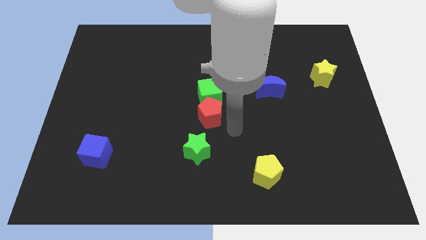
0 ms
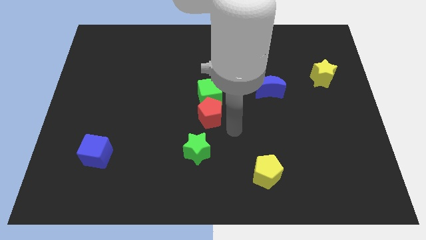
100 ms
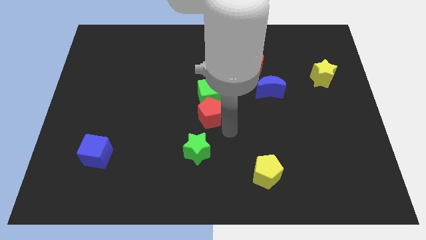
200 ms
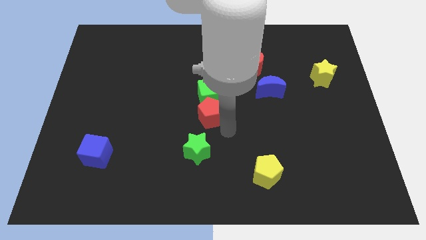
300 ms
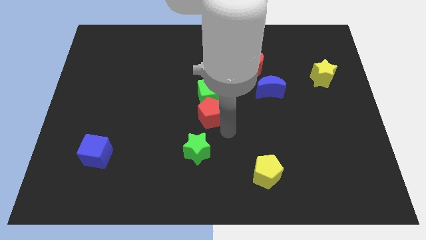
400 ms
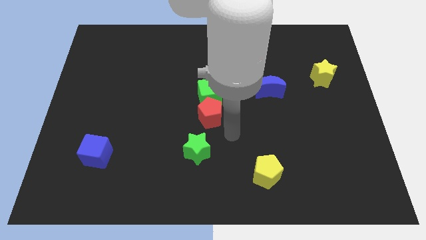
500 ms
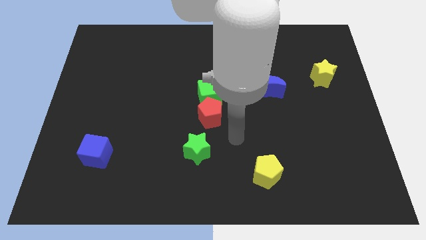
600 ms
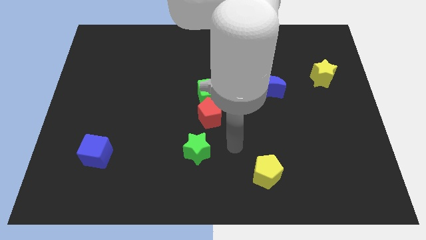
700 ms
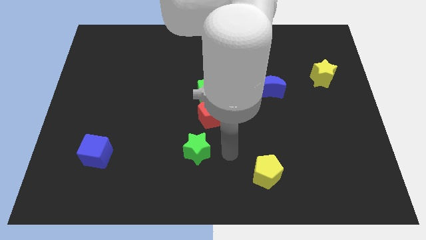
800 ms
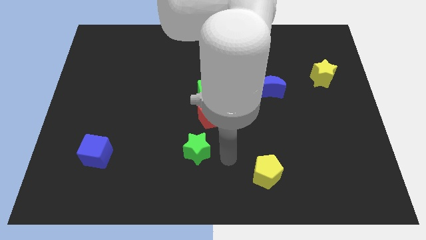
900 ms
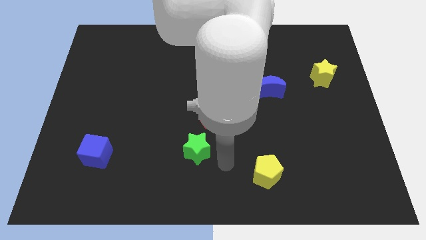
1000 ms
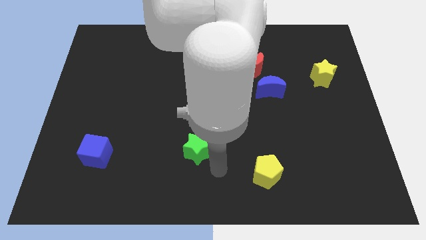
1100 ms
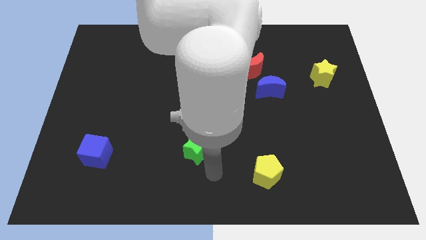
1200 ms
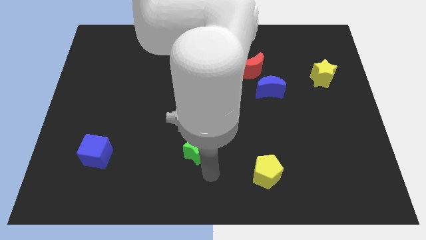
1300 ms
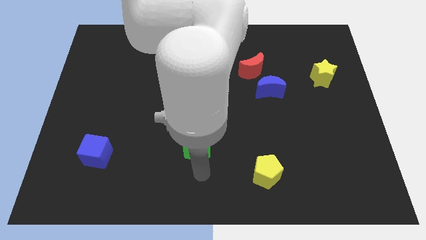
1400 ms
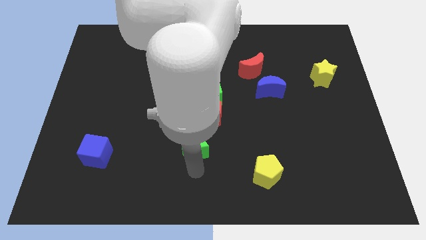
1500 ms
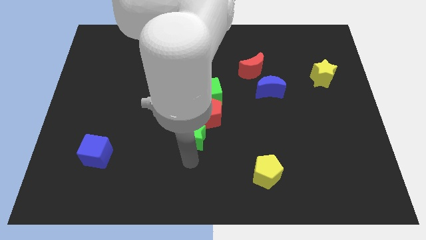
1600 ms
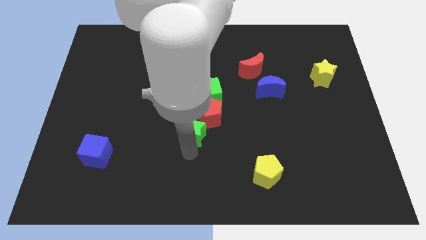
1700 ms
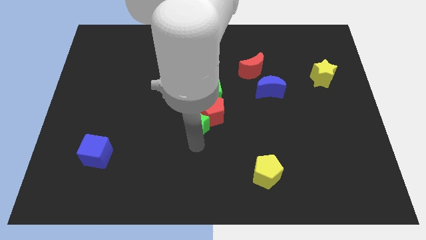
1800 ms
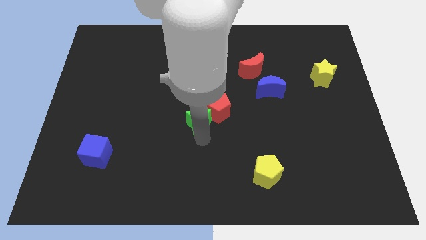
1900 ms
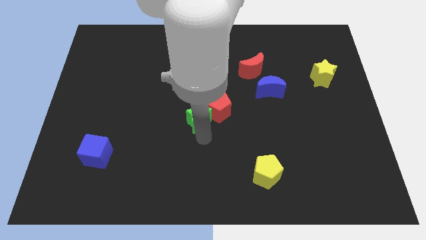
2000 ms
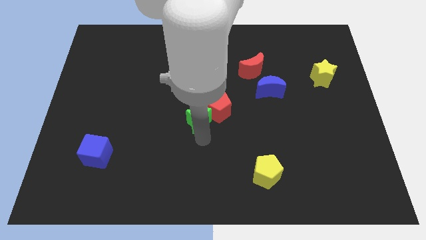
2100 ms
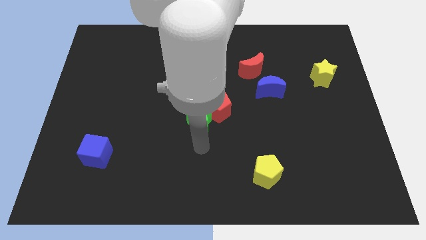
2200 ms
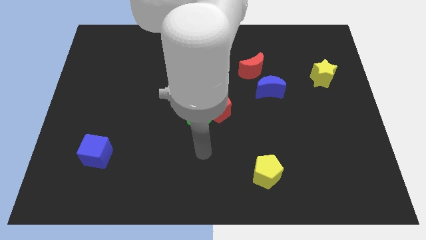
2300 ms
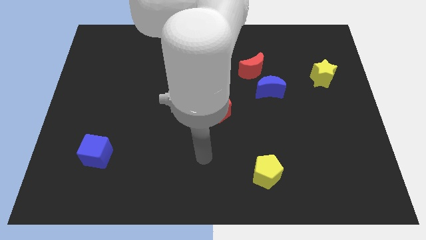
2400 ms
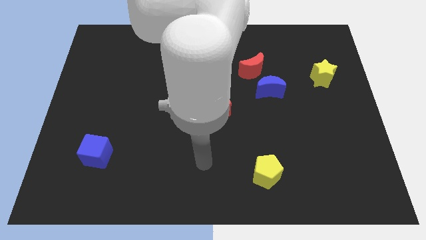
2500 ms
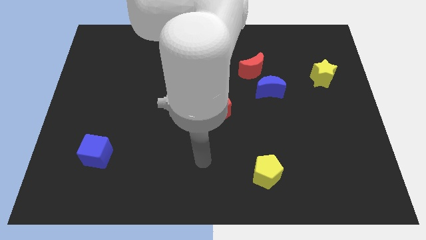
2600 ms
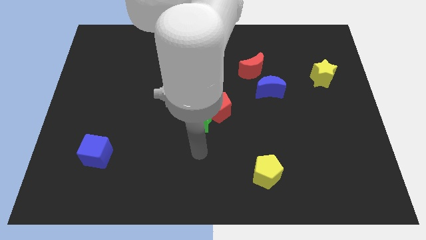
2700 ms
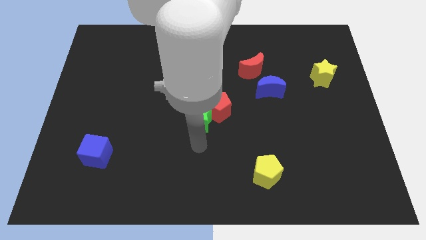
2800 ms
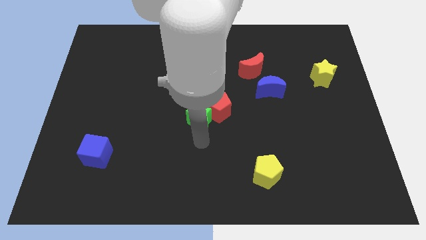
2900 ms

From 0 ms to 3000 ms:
push the green star into the red pentagon

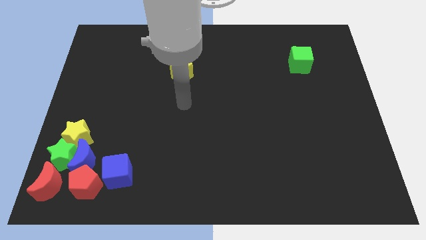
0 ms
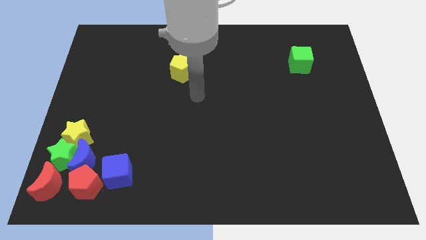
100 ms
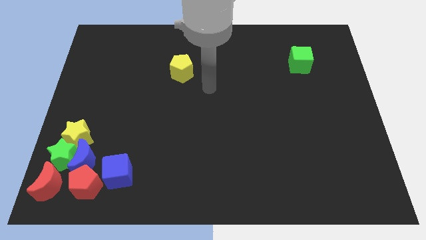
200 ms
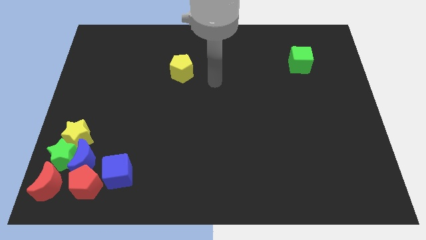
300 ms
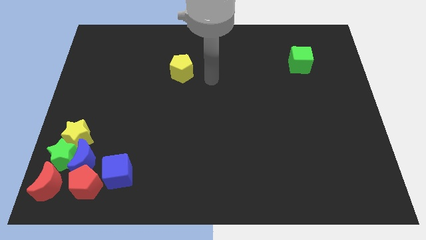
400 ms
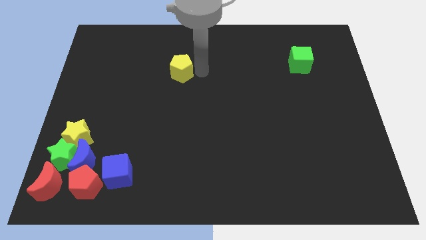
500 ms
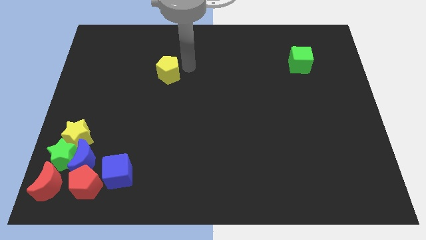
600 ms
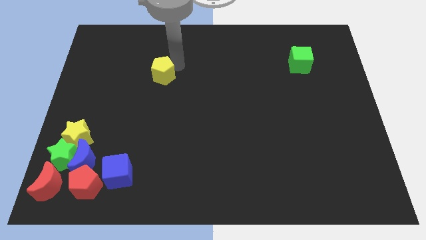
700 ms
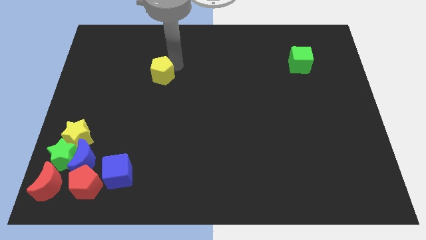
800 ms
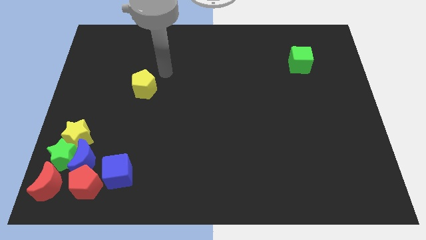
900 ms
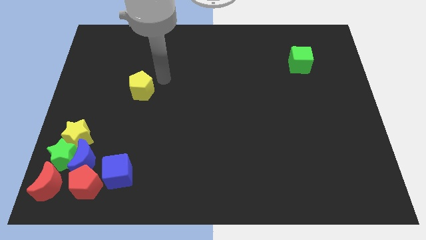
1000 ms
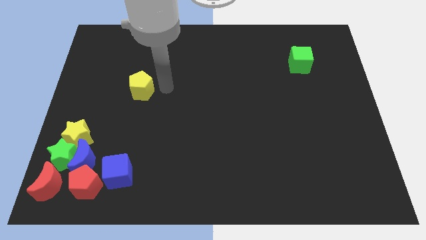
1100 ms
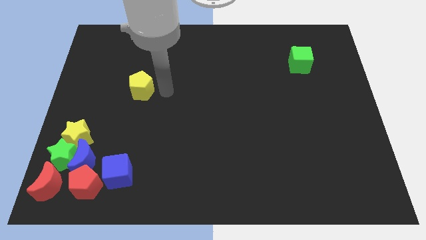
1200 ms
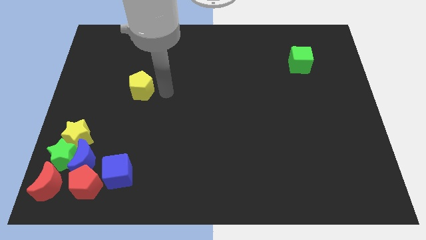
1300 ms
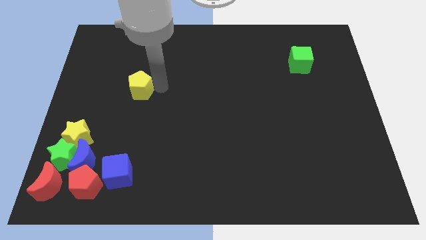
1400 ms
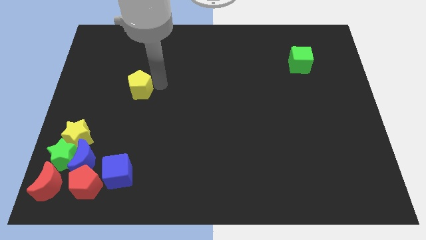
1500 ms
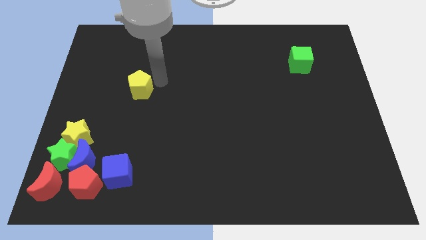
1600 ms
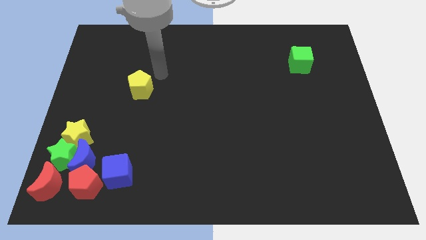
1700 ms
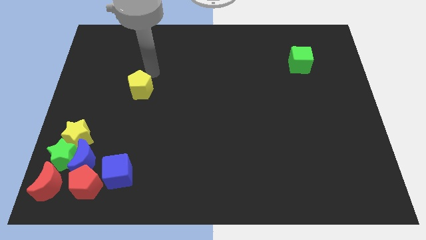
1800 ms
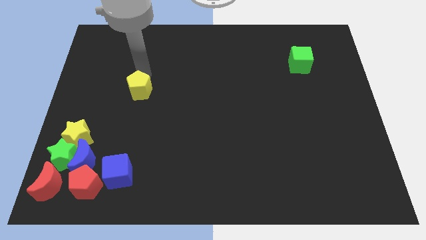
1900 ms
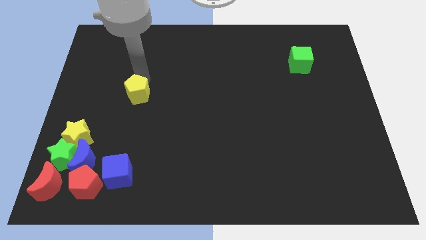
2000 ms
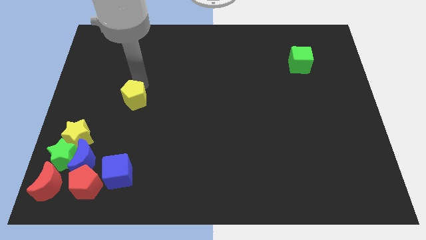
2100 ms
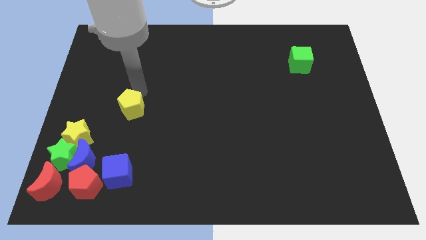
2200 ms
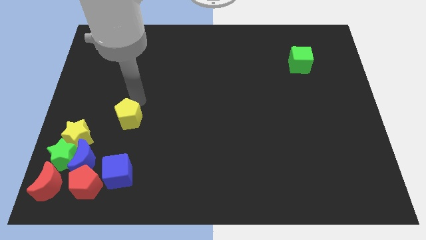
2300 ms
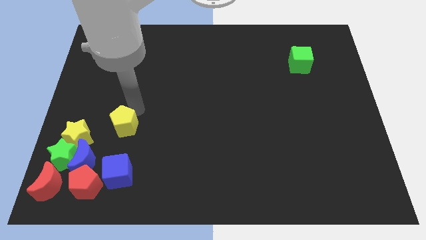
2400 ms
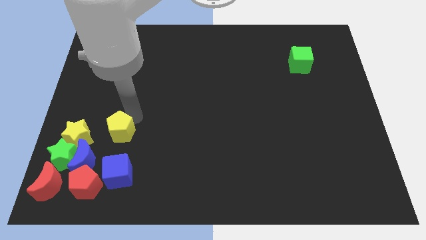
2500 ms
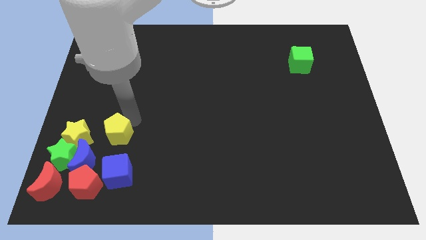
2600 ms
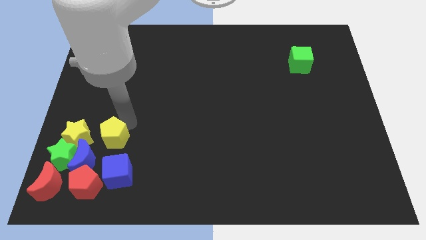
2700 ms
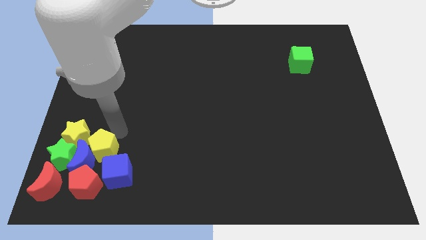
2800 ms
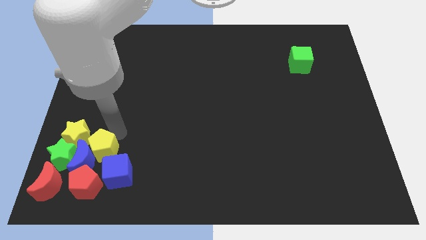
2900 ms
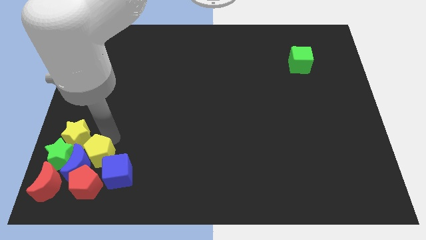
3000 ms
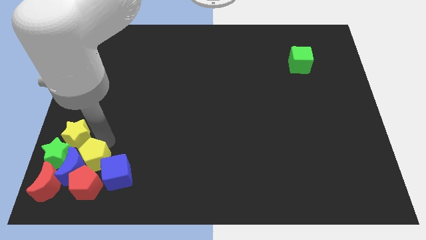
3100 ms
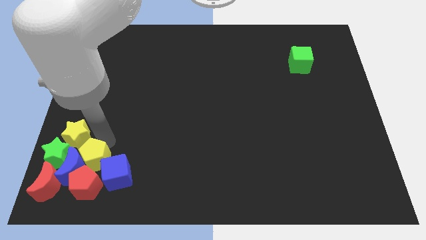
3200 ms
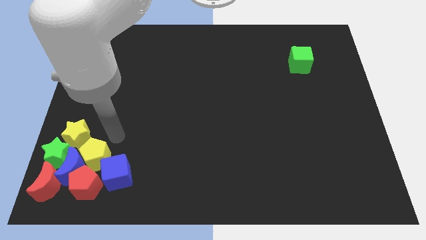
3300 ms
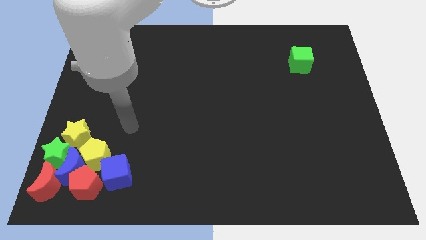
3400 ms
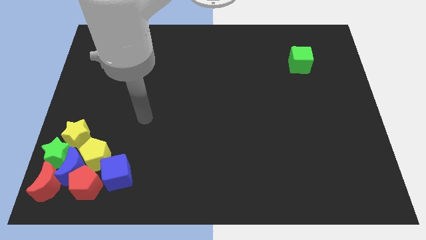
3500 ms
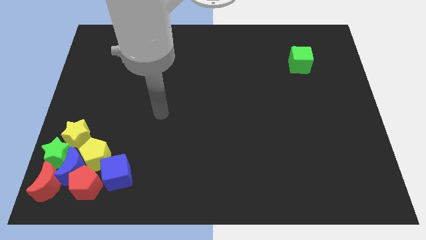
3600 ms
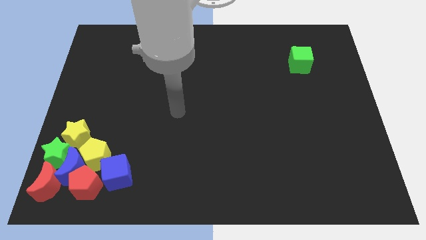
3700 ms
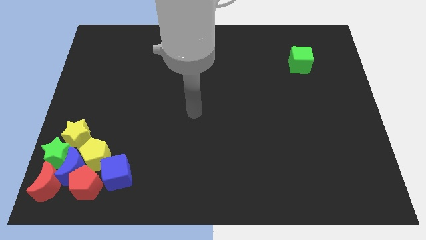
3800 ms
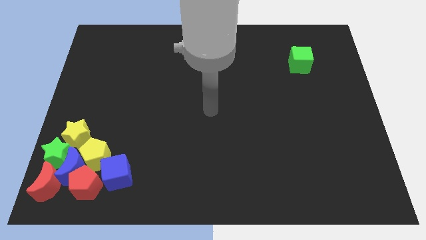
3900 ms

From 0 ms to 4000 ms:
push the yellow pentagon into the group of blocks

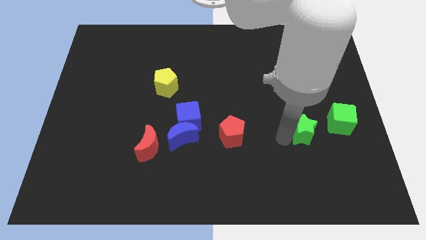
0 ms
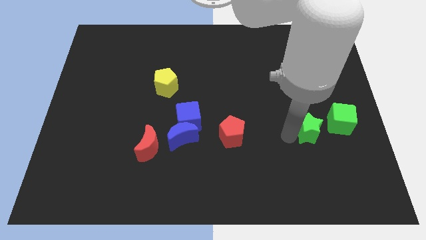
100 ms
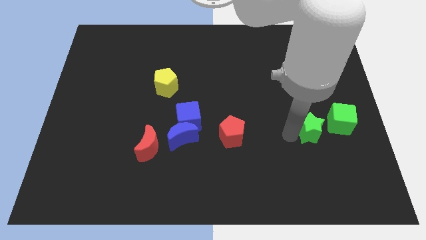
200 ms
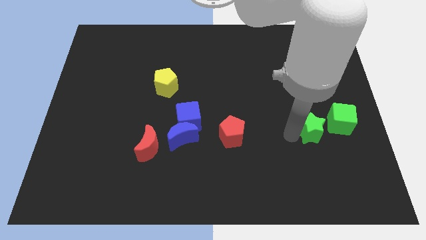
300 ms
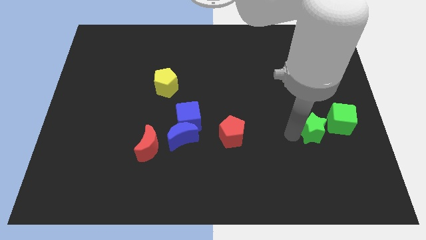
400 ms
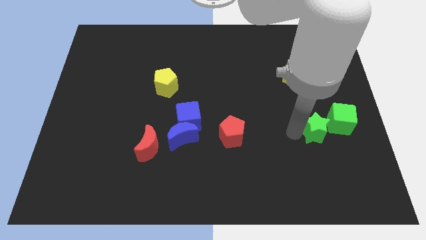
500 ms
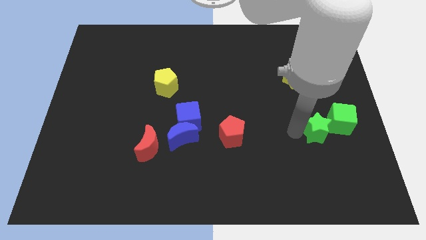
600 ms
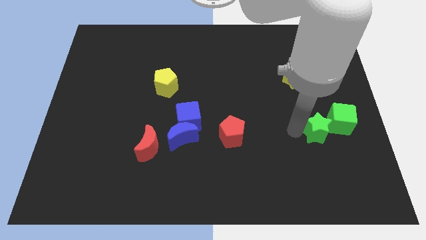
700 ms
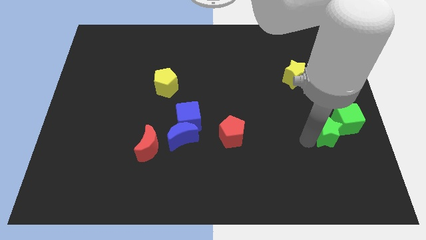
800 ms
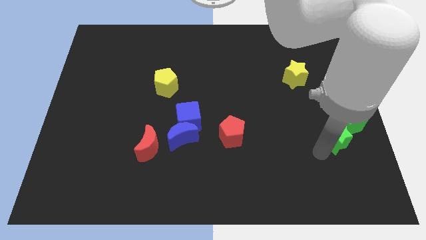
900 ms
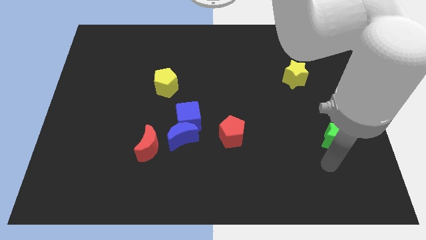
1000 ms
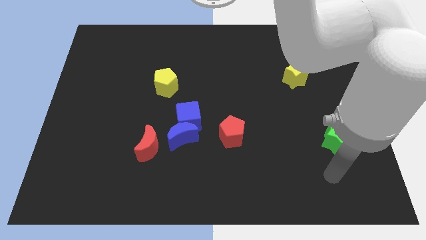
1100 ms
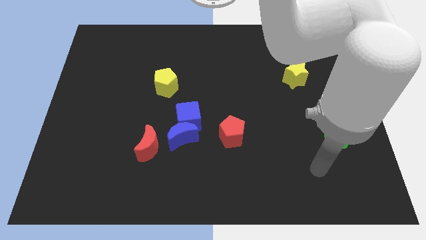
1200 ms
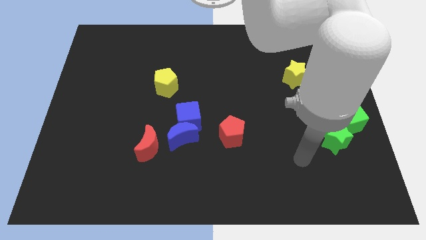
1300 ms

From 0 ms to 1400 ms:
push green star into green cube

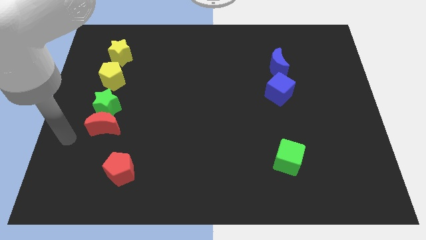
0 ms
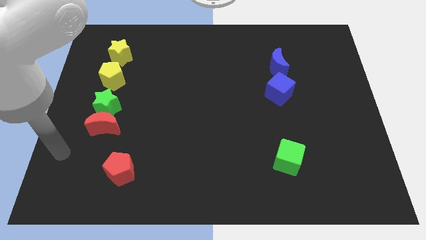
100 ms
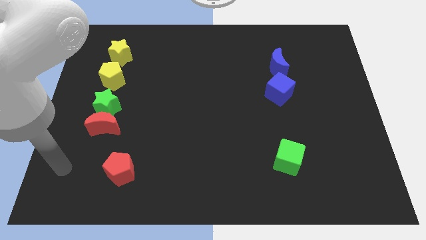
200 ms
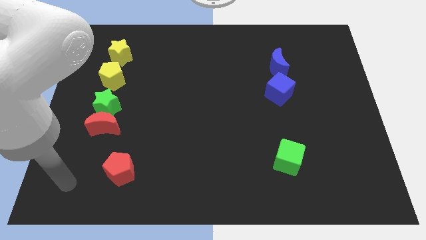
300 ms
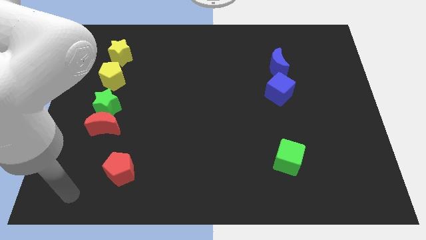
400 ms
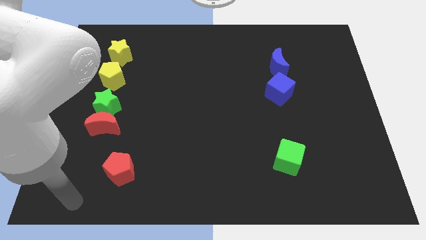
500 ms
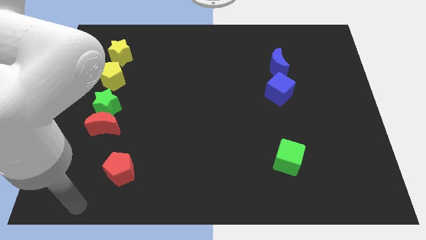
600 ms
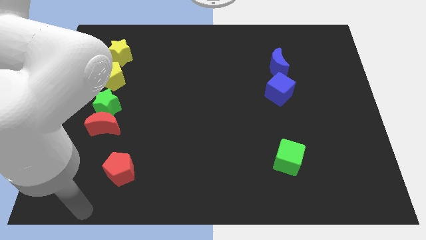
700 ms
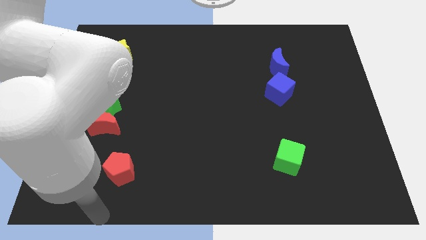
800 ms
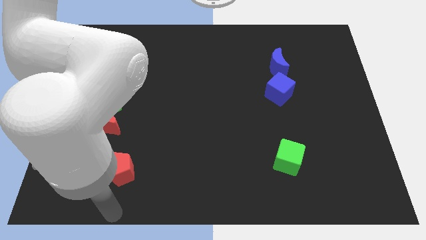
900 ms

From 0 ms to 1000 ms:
move your arm close to the red pentagon
